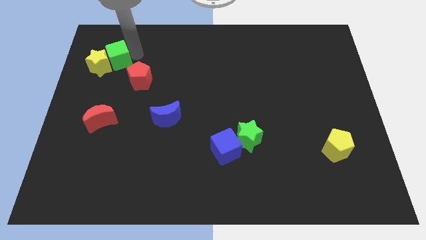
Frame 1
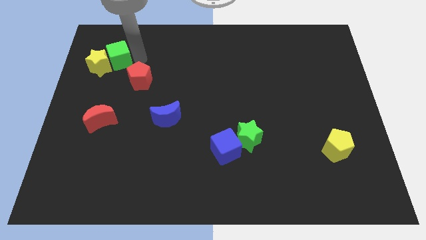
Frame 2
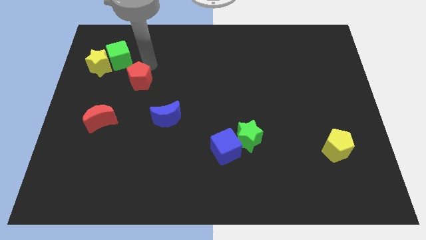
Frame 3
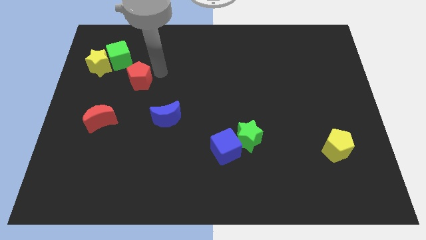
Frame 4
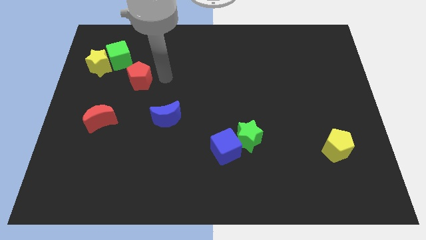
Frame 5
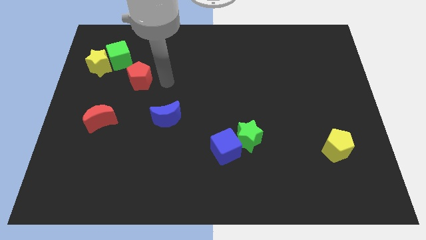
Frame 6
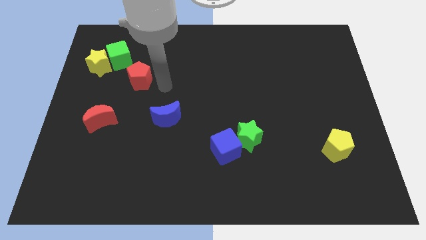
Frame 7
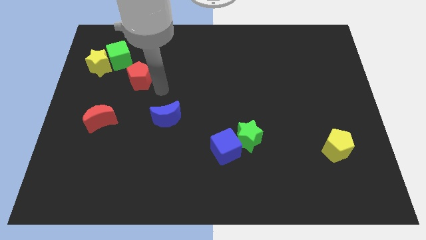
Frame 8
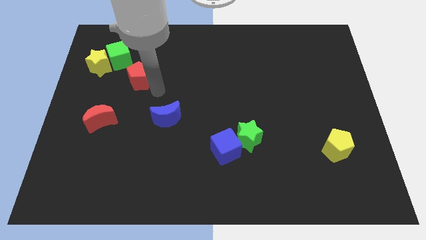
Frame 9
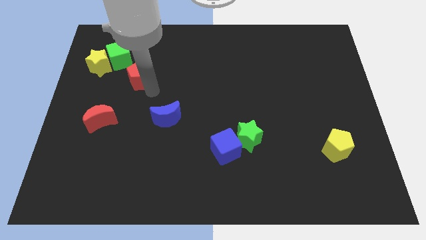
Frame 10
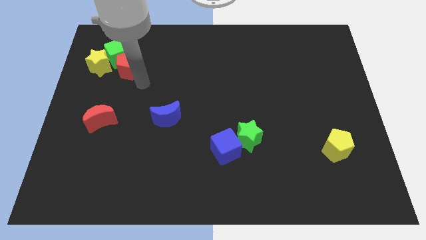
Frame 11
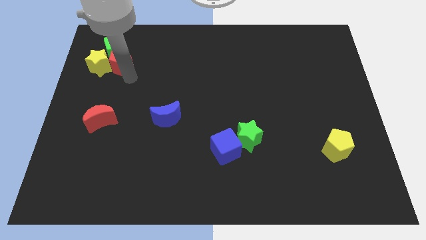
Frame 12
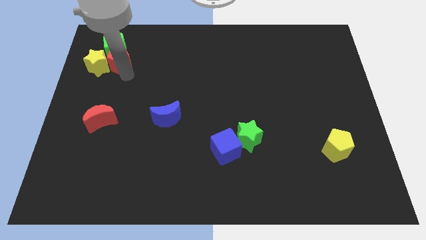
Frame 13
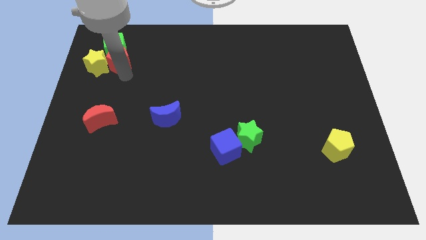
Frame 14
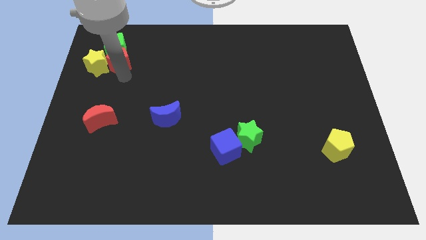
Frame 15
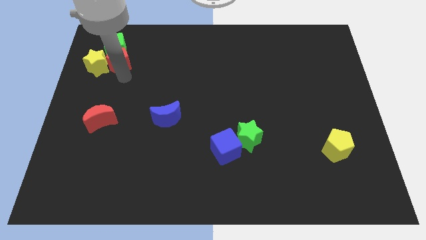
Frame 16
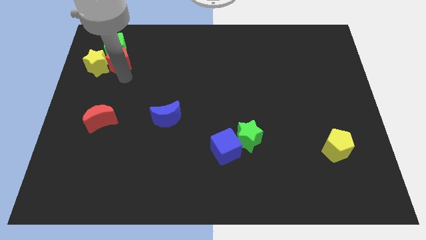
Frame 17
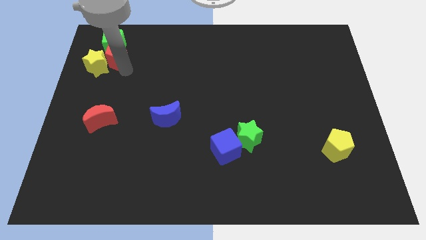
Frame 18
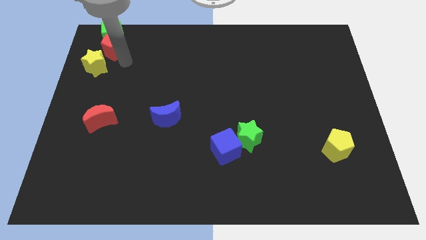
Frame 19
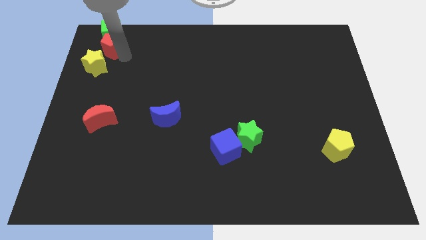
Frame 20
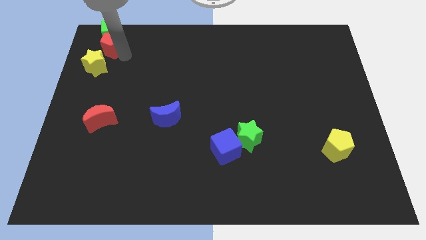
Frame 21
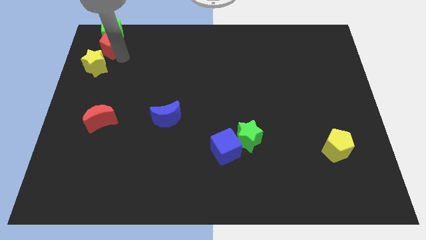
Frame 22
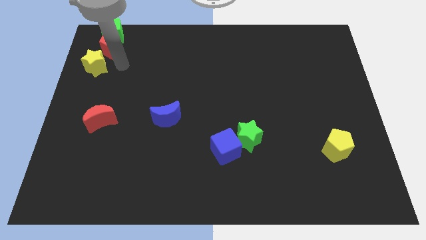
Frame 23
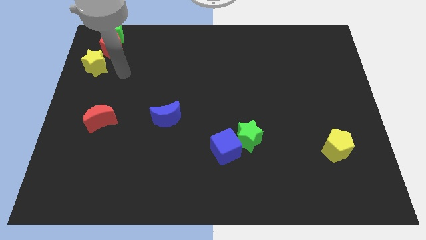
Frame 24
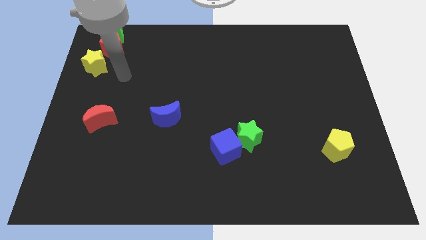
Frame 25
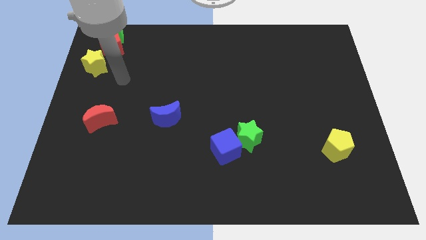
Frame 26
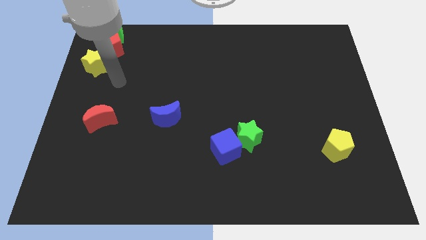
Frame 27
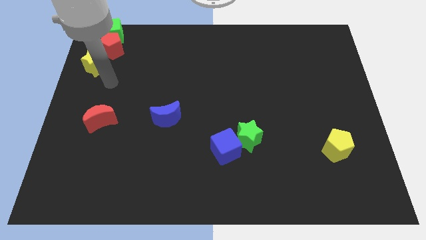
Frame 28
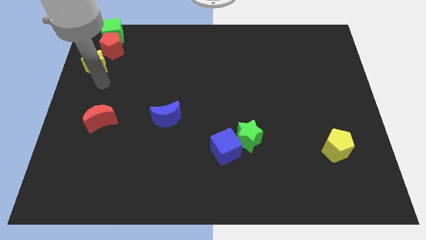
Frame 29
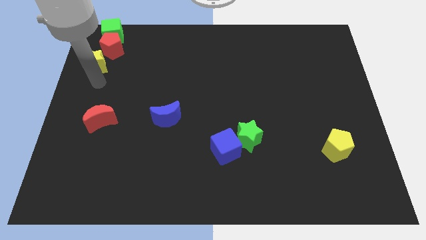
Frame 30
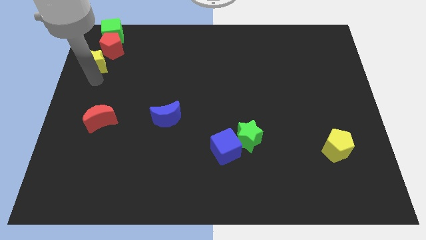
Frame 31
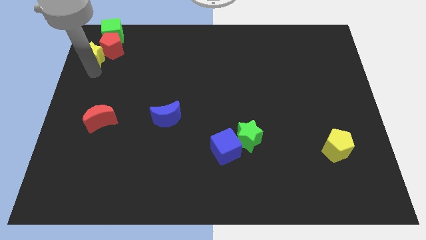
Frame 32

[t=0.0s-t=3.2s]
push the red pentagon into the green cube

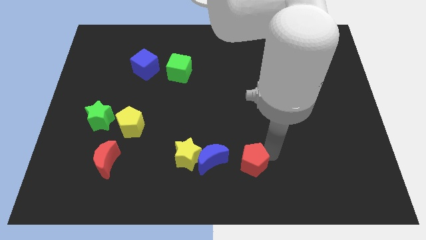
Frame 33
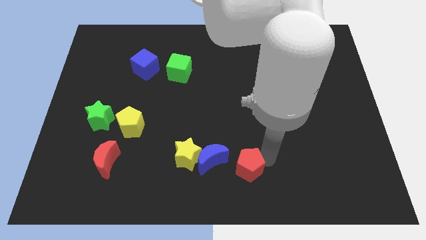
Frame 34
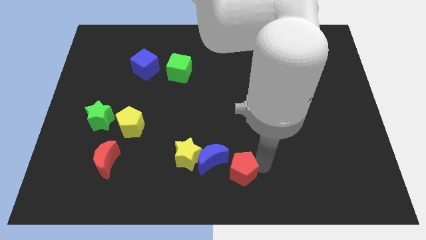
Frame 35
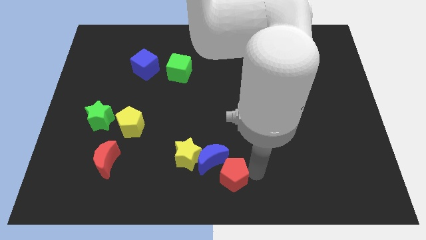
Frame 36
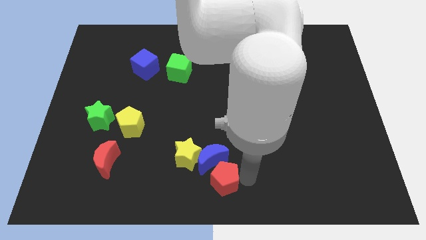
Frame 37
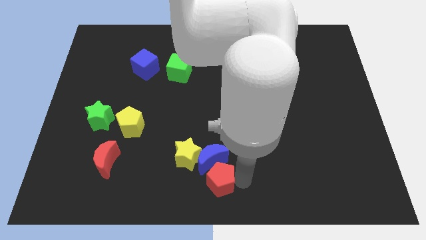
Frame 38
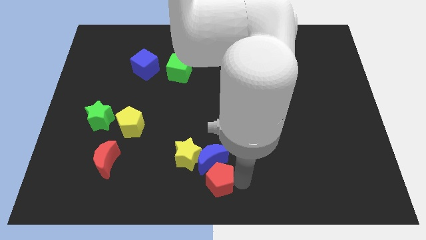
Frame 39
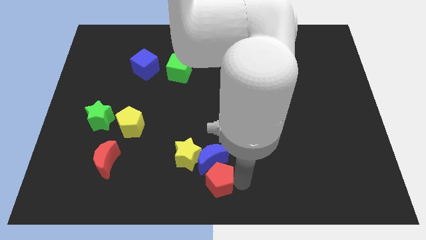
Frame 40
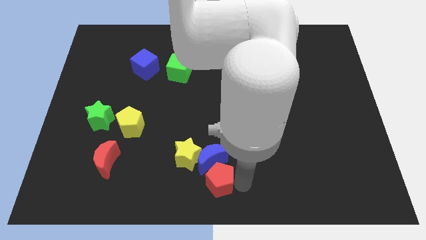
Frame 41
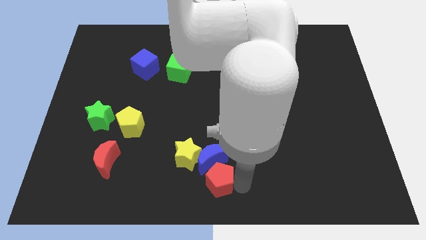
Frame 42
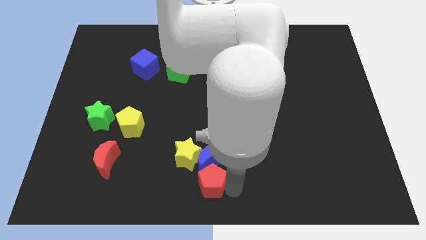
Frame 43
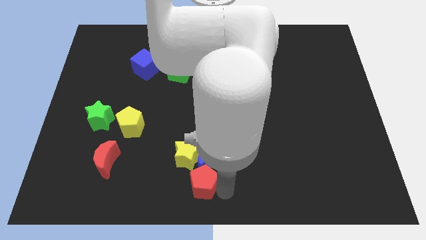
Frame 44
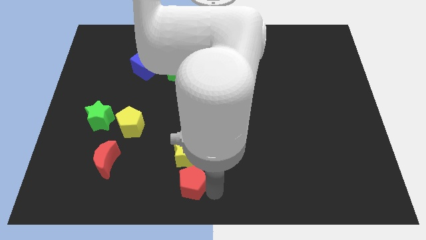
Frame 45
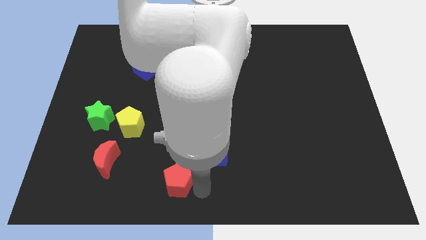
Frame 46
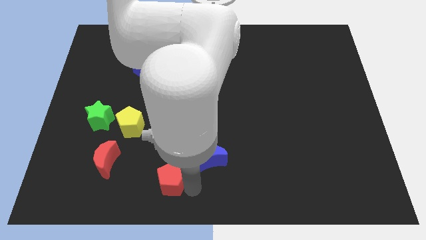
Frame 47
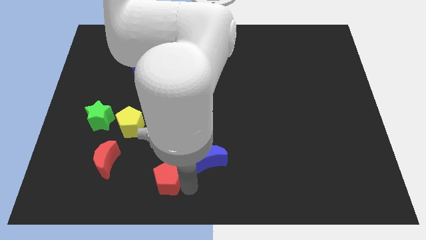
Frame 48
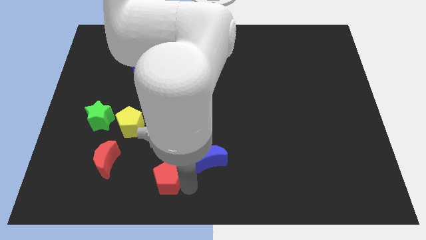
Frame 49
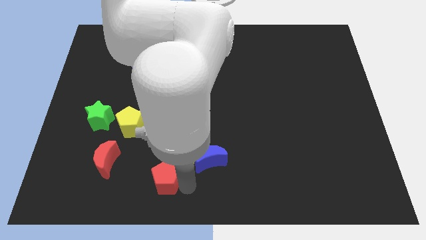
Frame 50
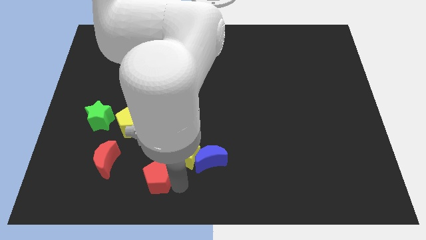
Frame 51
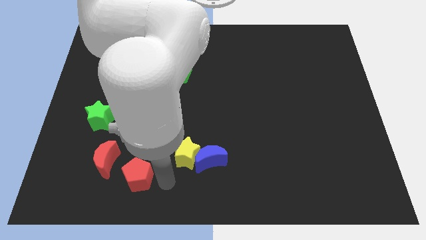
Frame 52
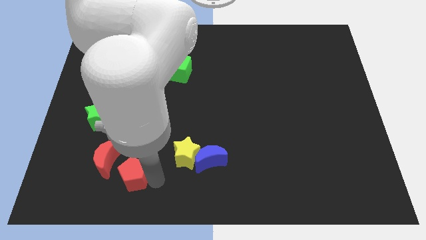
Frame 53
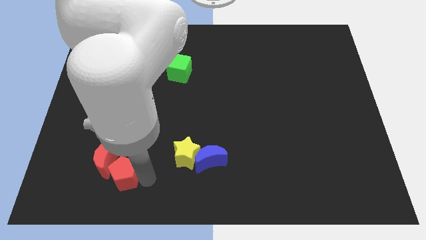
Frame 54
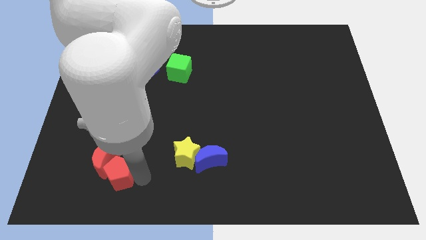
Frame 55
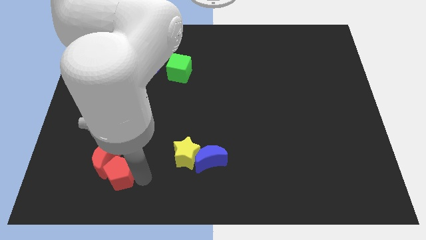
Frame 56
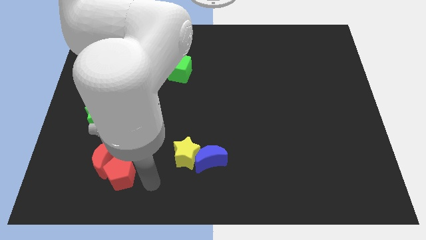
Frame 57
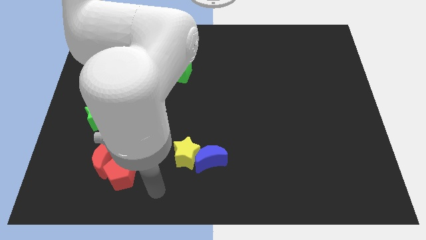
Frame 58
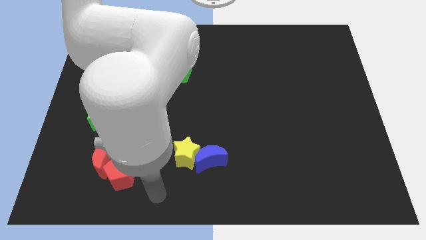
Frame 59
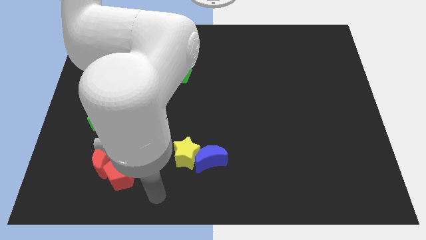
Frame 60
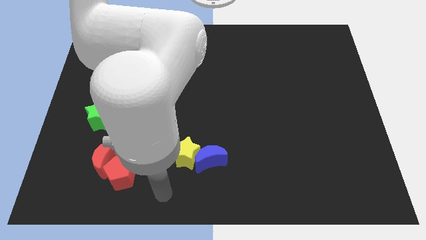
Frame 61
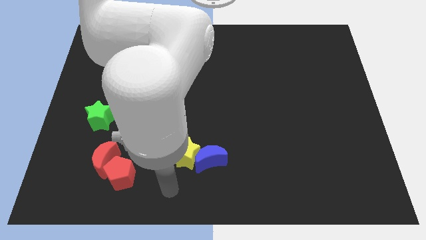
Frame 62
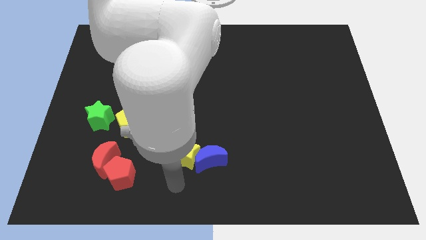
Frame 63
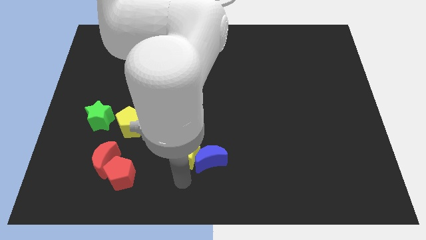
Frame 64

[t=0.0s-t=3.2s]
push red pentagon towards red moon

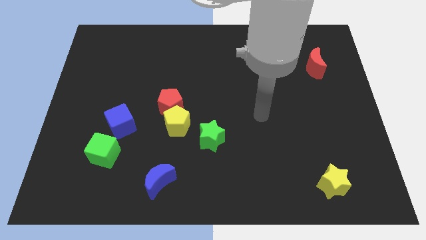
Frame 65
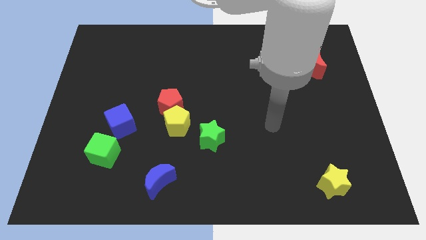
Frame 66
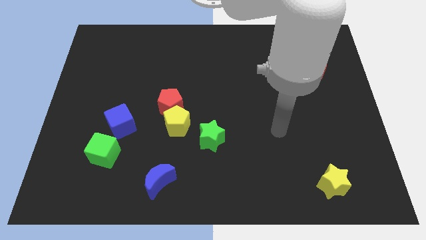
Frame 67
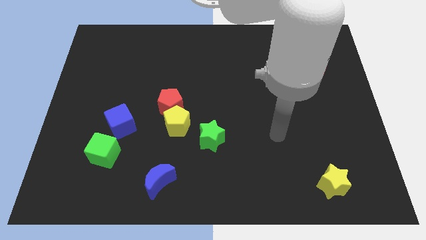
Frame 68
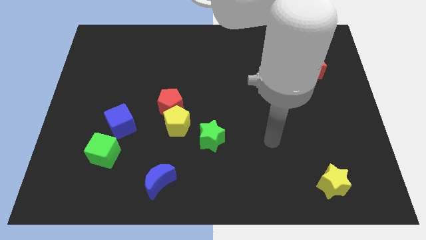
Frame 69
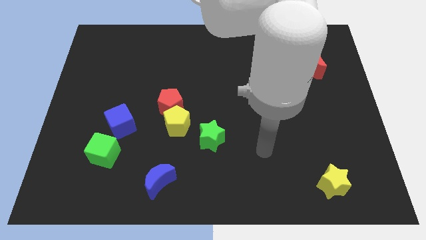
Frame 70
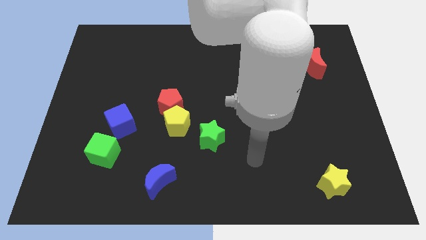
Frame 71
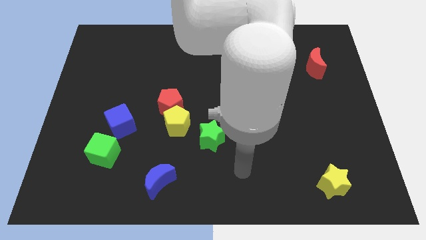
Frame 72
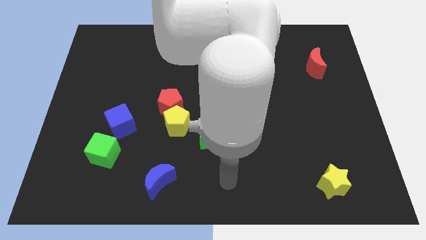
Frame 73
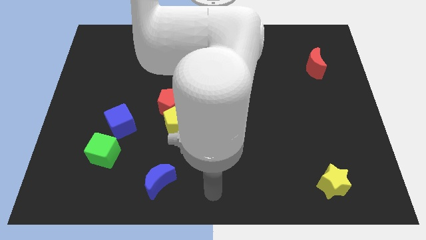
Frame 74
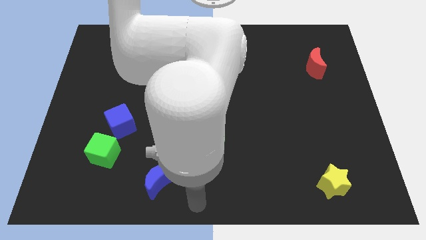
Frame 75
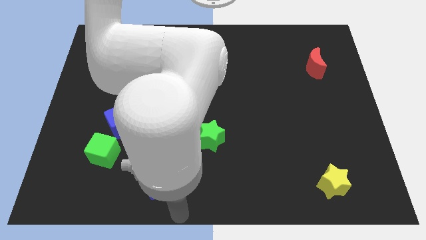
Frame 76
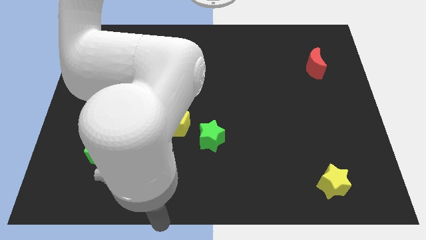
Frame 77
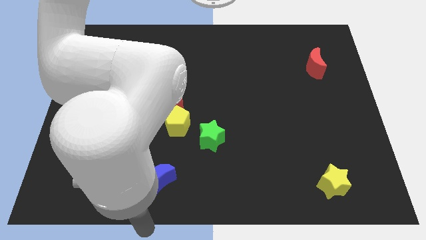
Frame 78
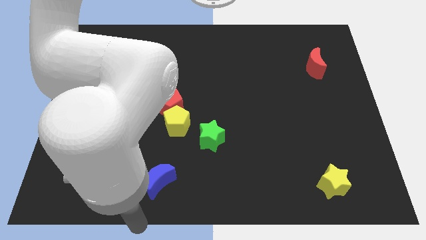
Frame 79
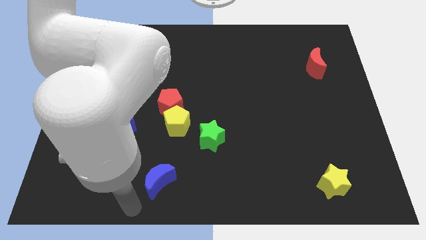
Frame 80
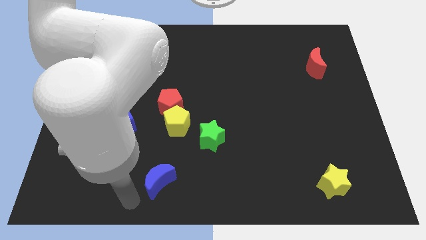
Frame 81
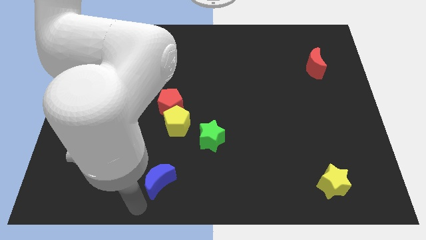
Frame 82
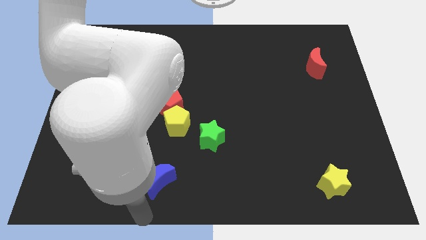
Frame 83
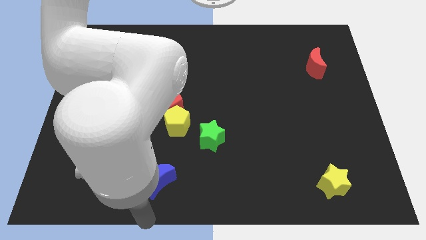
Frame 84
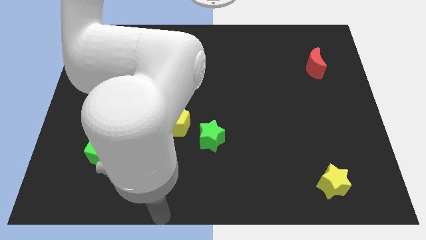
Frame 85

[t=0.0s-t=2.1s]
point the arm below the blue moon

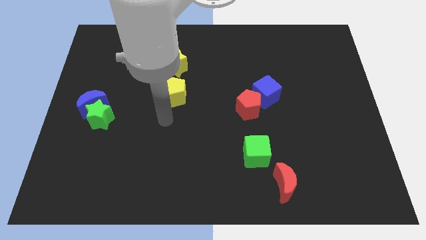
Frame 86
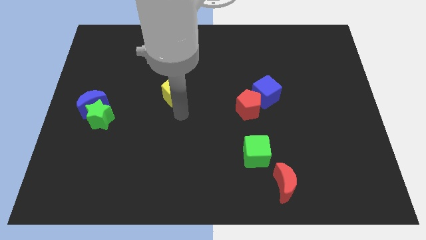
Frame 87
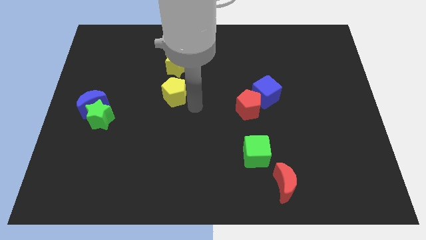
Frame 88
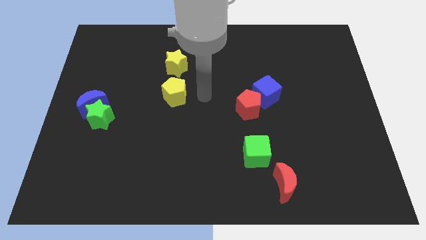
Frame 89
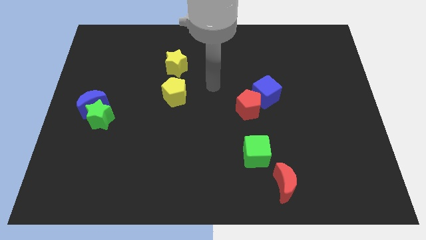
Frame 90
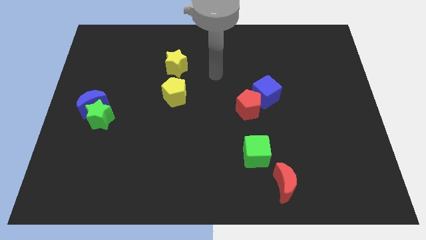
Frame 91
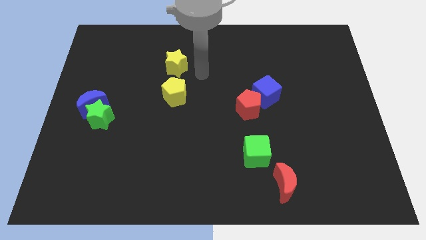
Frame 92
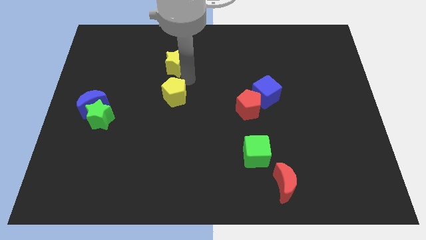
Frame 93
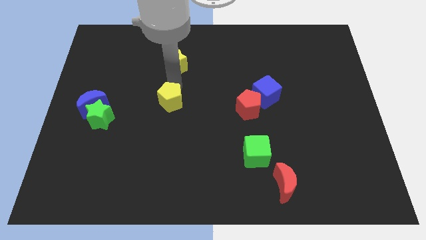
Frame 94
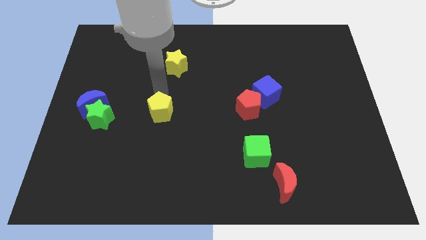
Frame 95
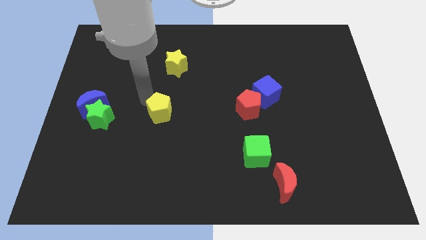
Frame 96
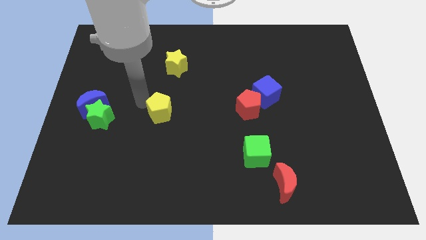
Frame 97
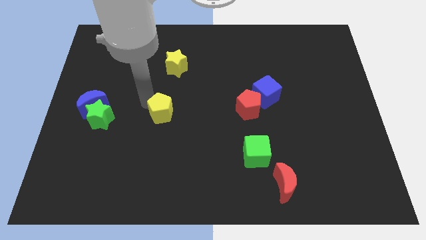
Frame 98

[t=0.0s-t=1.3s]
place the yellow pentagon parallel to green star
